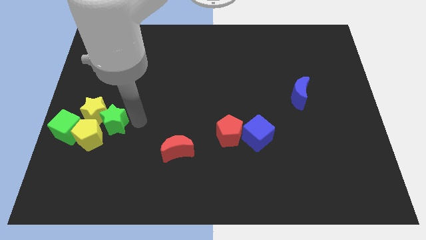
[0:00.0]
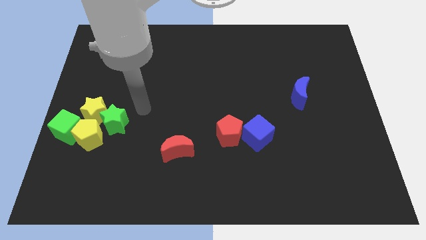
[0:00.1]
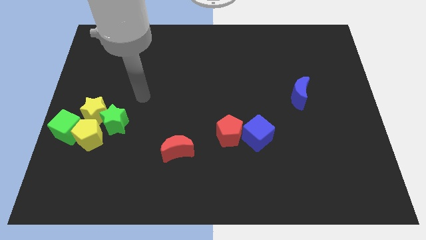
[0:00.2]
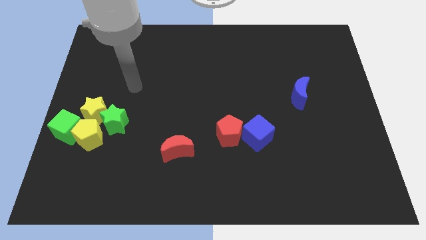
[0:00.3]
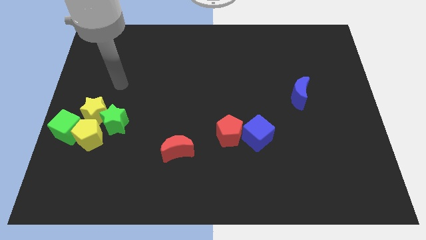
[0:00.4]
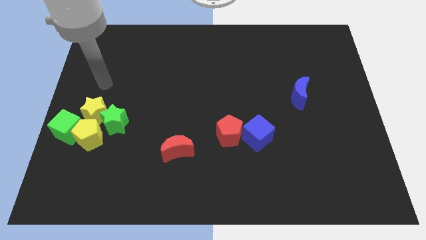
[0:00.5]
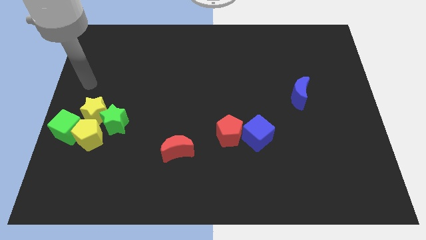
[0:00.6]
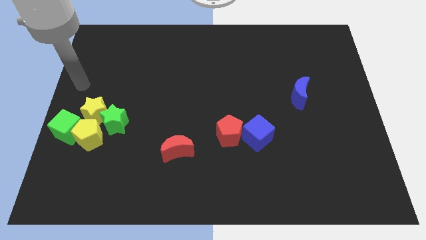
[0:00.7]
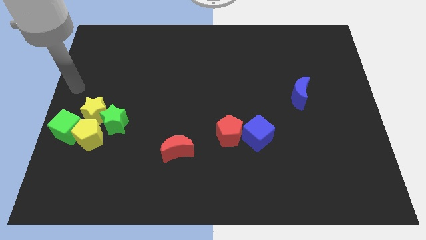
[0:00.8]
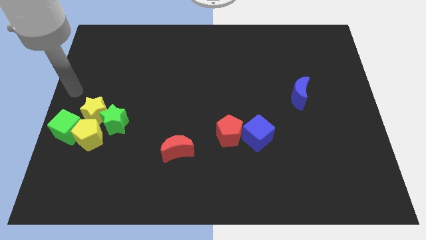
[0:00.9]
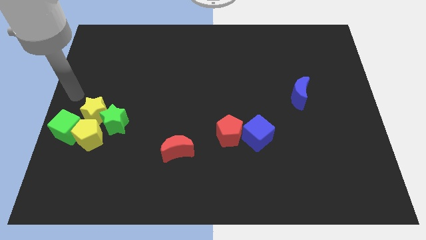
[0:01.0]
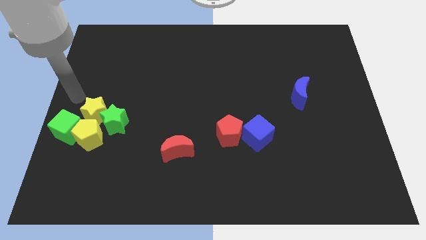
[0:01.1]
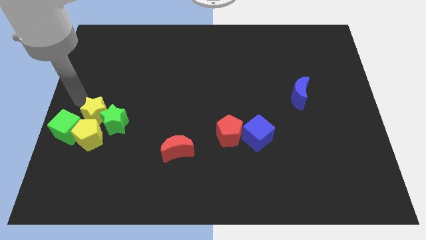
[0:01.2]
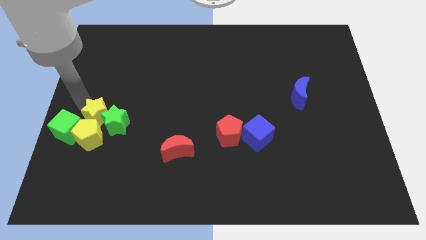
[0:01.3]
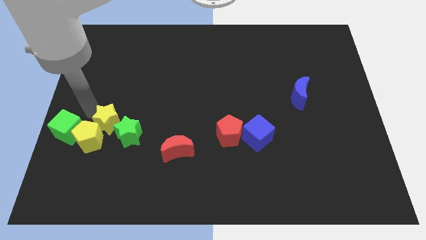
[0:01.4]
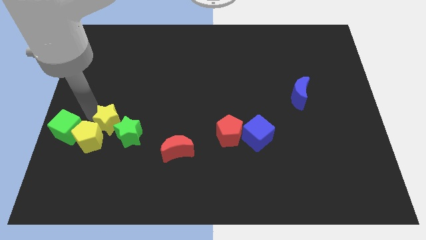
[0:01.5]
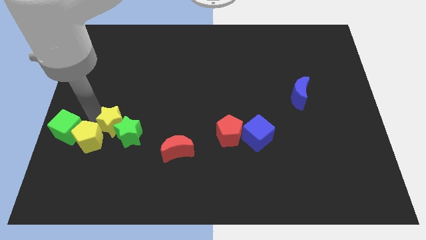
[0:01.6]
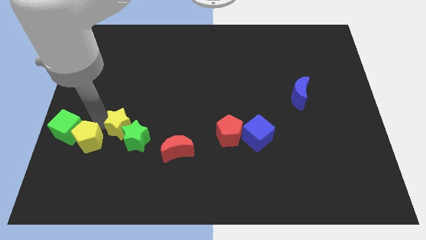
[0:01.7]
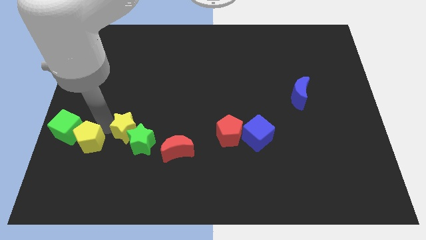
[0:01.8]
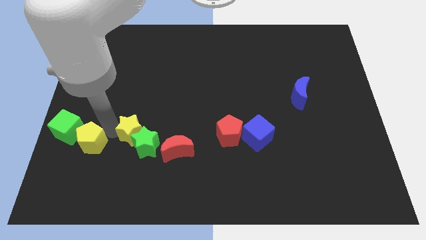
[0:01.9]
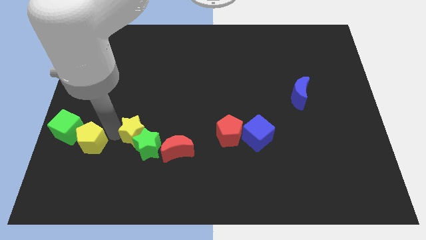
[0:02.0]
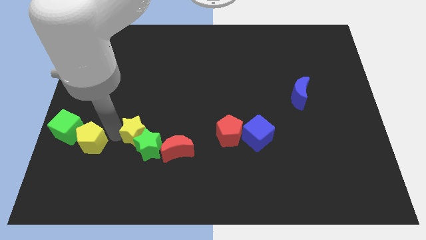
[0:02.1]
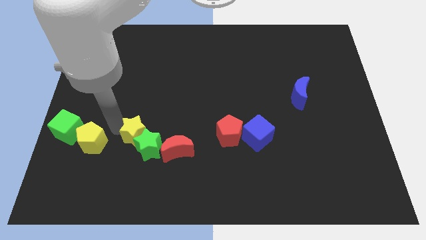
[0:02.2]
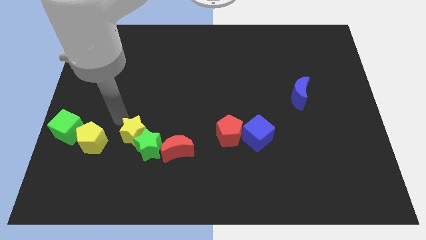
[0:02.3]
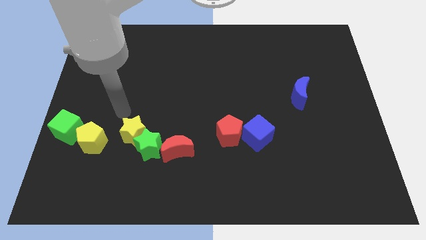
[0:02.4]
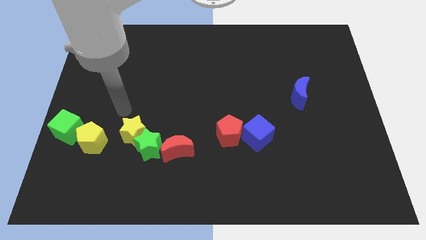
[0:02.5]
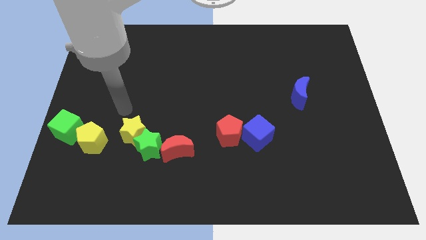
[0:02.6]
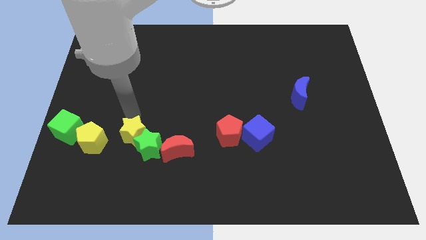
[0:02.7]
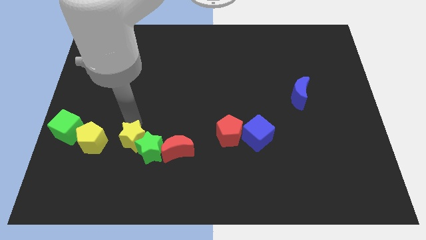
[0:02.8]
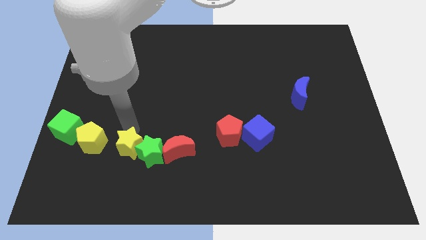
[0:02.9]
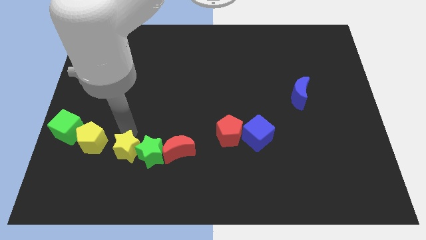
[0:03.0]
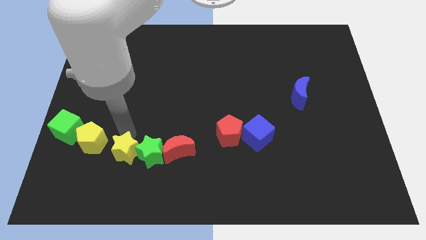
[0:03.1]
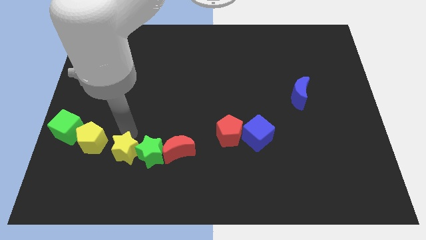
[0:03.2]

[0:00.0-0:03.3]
place the yellow star to the right of the yellow pentagon

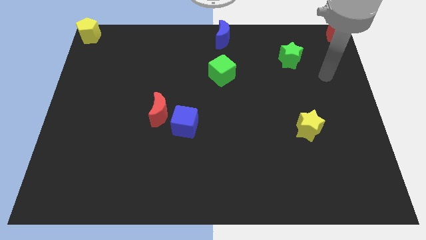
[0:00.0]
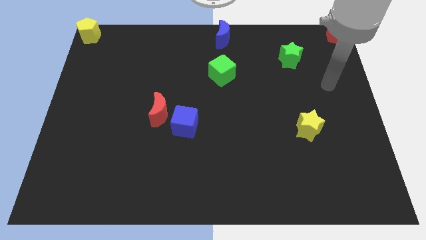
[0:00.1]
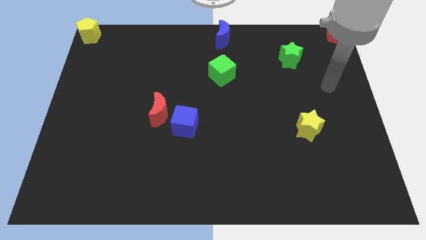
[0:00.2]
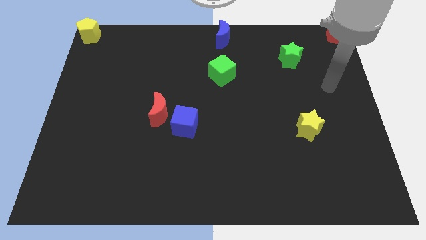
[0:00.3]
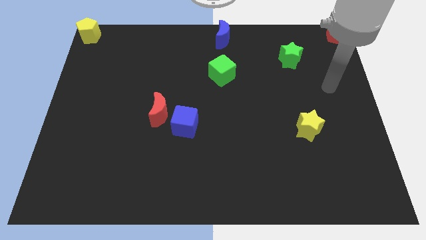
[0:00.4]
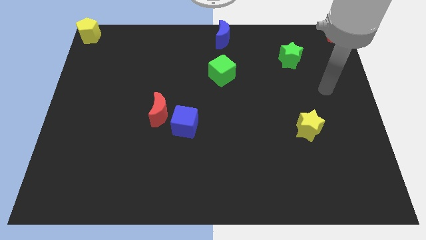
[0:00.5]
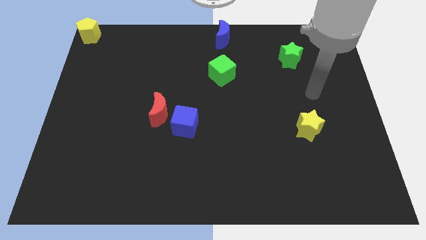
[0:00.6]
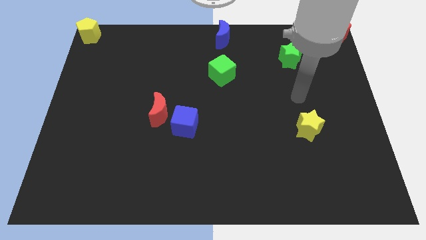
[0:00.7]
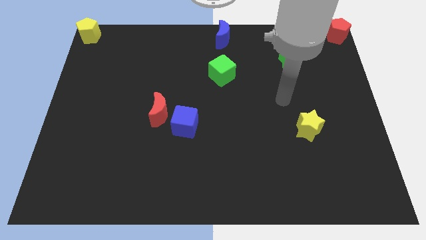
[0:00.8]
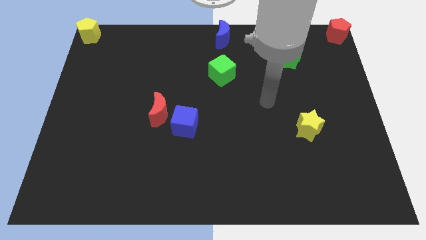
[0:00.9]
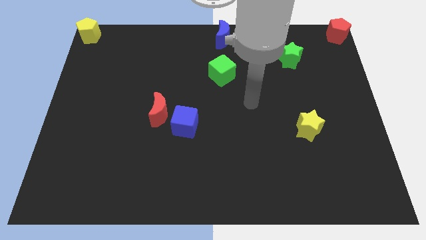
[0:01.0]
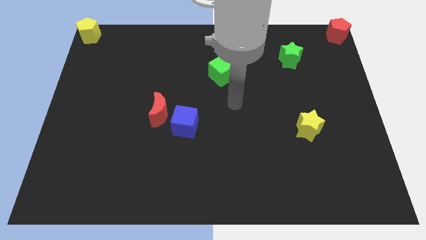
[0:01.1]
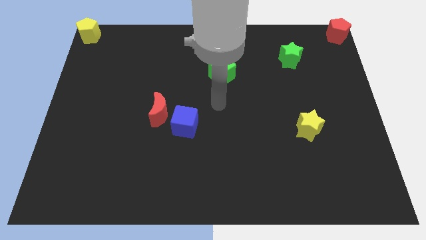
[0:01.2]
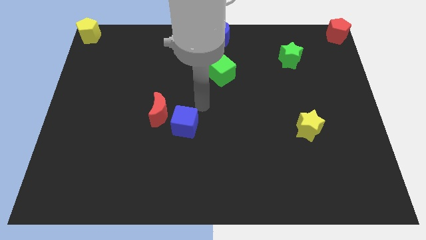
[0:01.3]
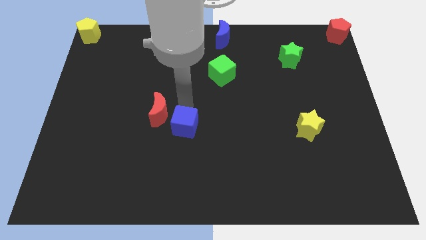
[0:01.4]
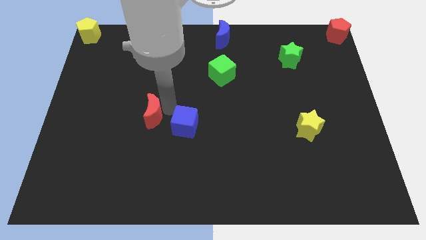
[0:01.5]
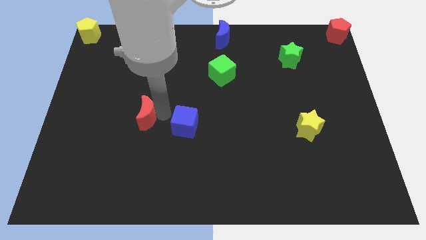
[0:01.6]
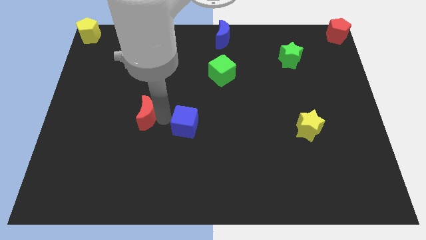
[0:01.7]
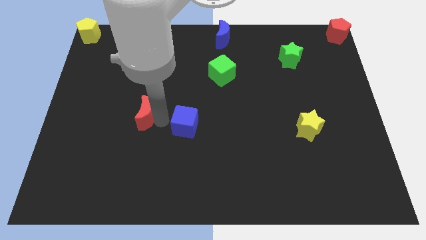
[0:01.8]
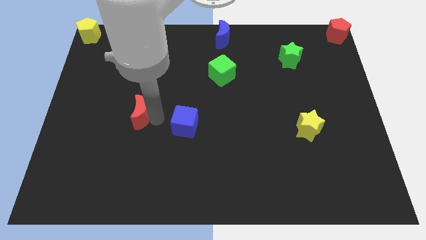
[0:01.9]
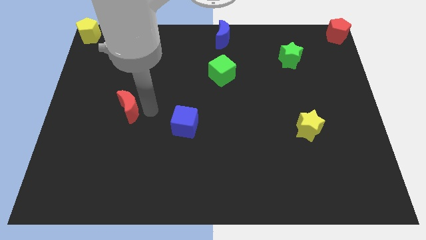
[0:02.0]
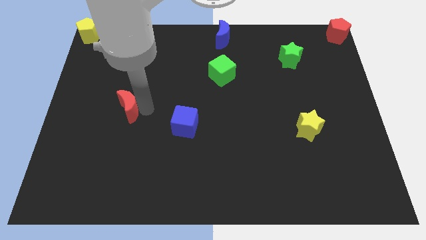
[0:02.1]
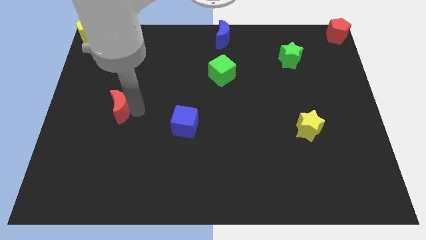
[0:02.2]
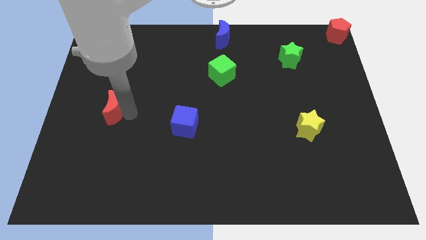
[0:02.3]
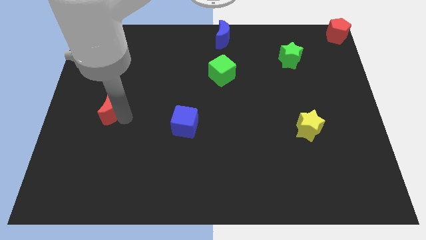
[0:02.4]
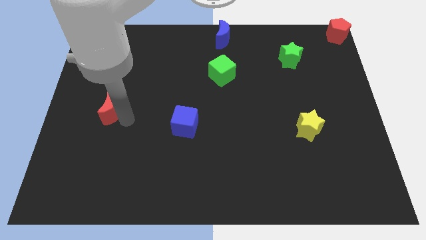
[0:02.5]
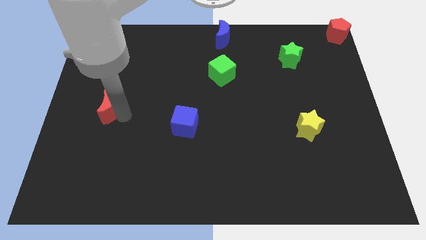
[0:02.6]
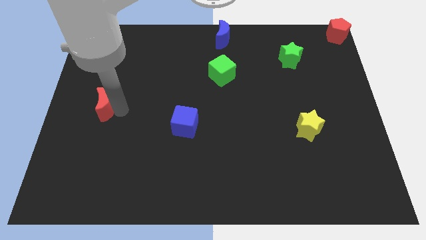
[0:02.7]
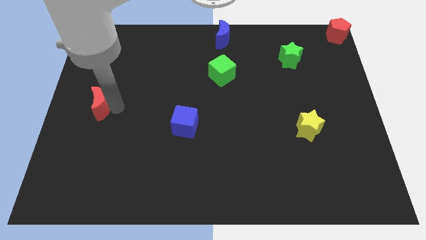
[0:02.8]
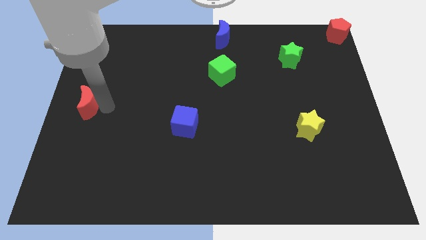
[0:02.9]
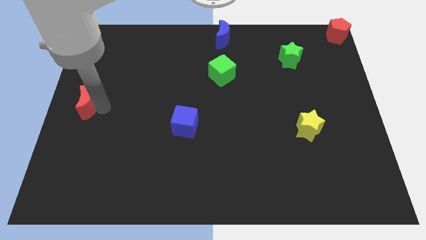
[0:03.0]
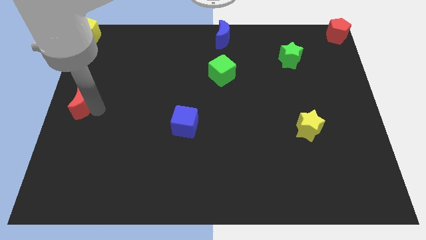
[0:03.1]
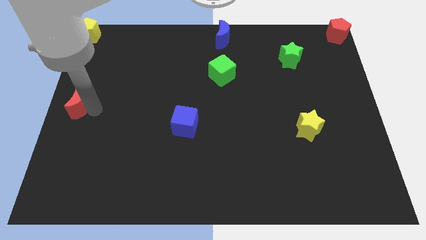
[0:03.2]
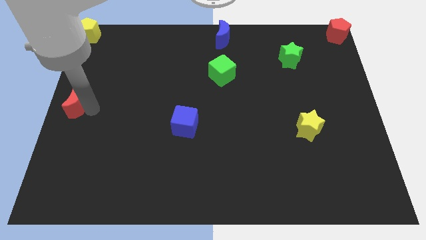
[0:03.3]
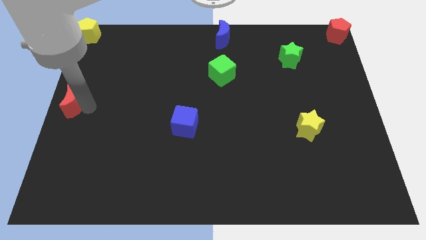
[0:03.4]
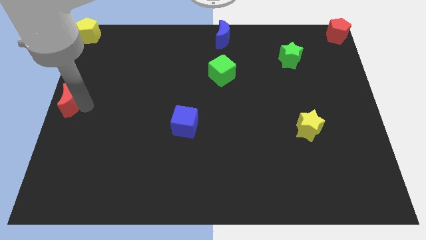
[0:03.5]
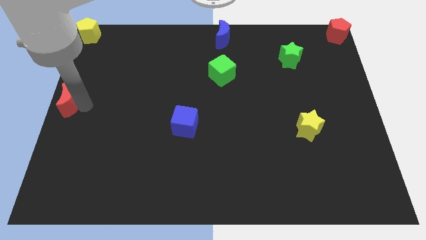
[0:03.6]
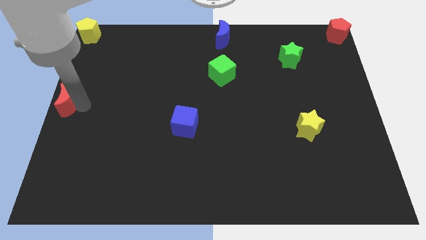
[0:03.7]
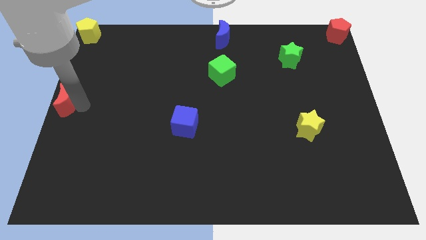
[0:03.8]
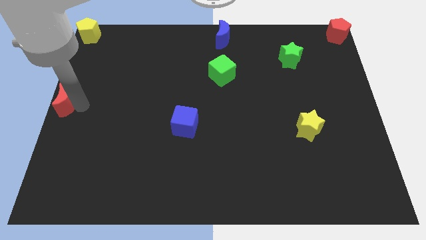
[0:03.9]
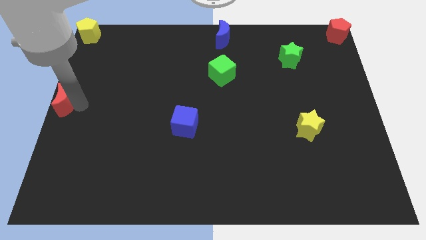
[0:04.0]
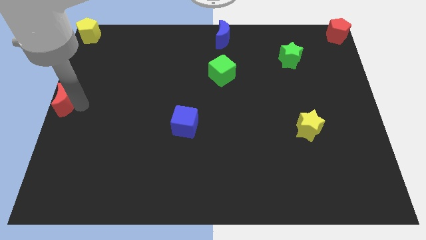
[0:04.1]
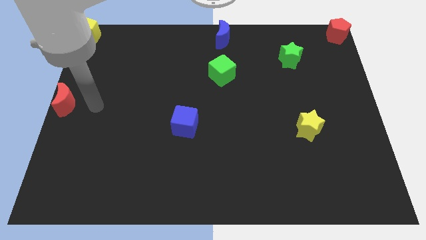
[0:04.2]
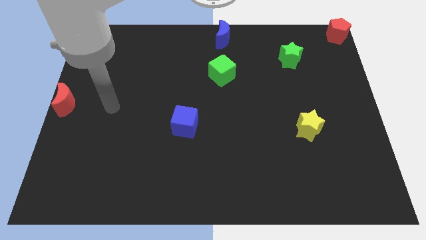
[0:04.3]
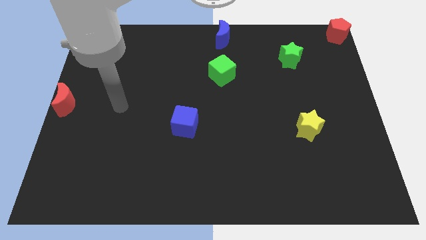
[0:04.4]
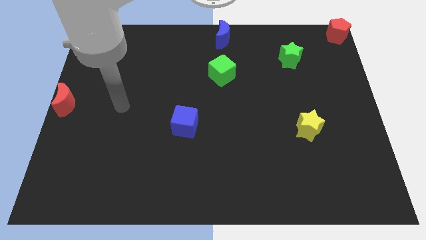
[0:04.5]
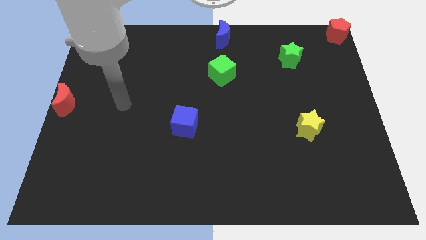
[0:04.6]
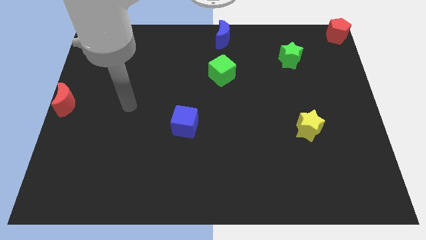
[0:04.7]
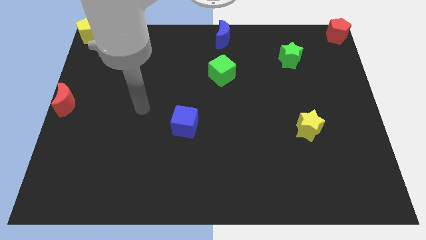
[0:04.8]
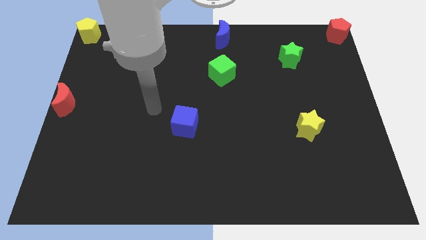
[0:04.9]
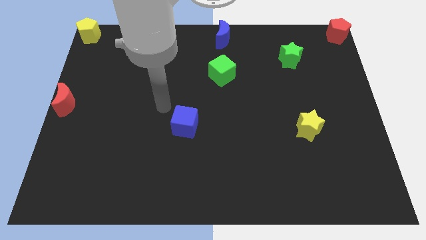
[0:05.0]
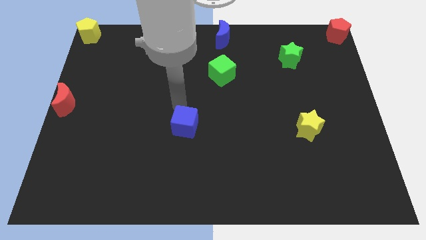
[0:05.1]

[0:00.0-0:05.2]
push the red crescent to the left center of the board

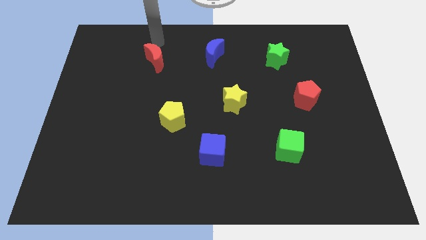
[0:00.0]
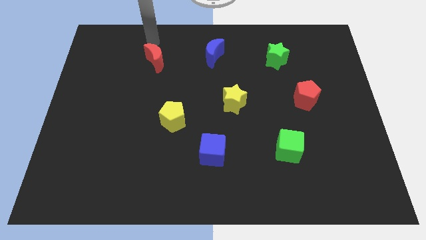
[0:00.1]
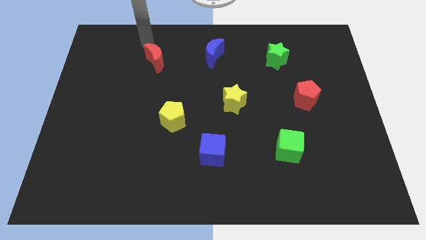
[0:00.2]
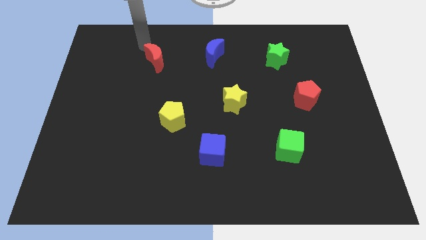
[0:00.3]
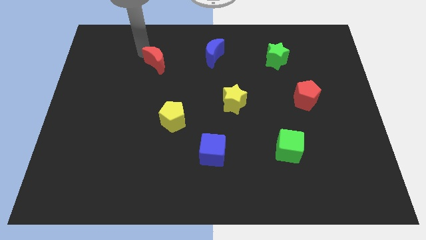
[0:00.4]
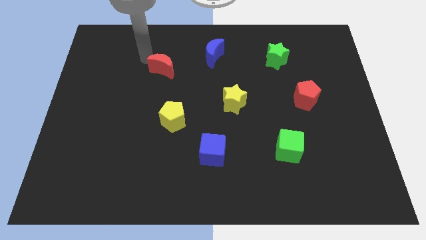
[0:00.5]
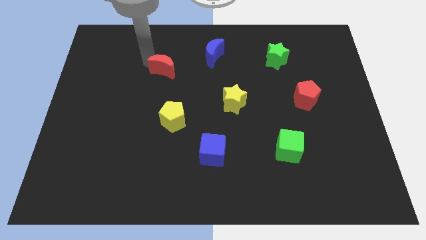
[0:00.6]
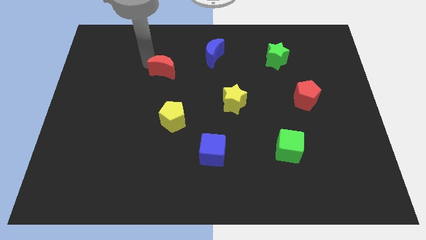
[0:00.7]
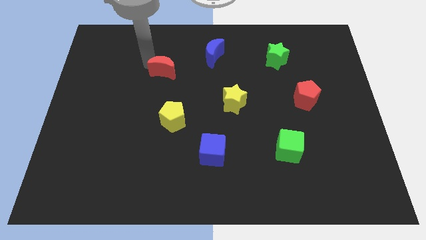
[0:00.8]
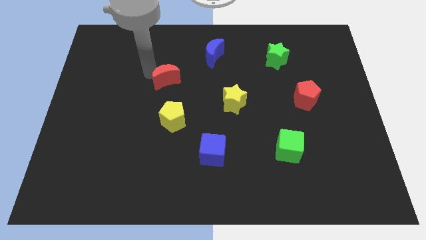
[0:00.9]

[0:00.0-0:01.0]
push the red crescent to the bottom of the board
